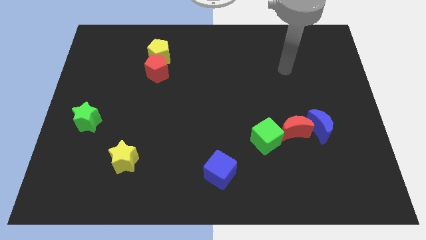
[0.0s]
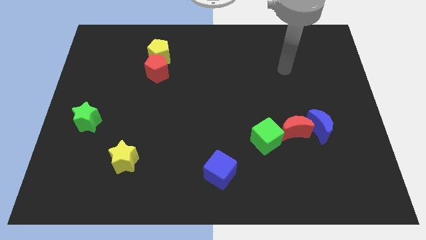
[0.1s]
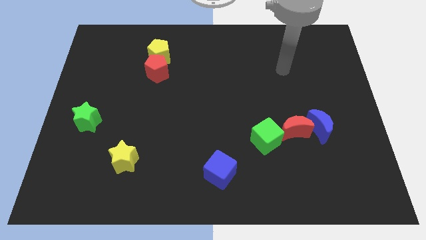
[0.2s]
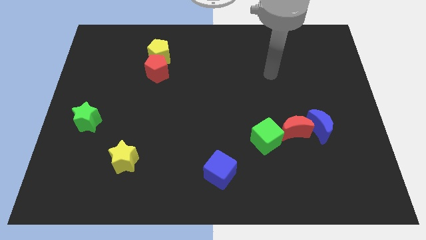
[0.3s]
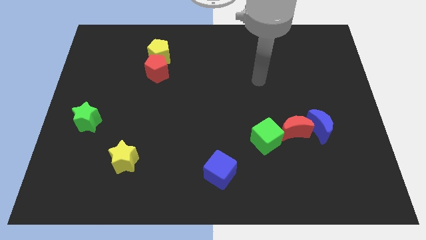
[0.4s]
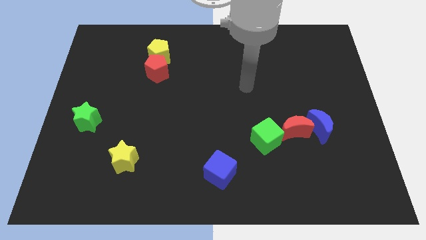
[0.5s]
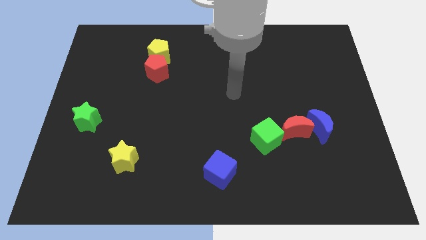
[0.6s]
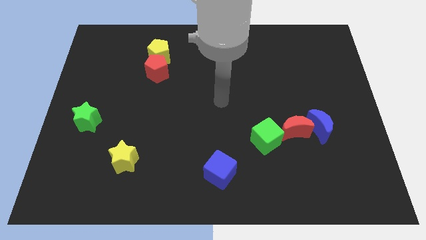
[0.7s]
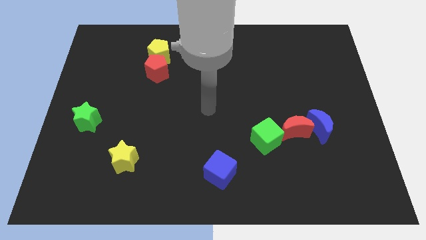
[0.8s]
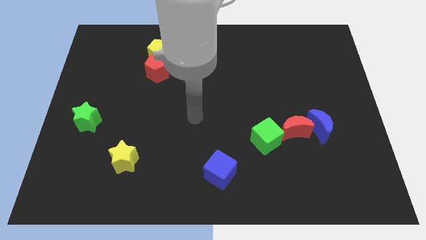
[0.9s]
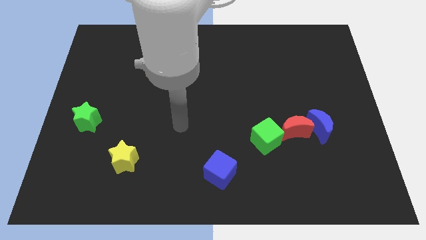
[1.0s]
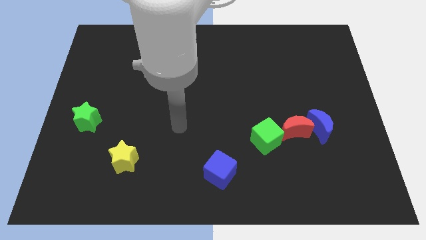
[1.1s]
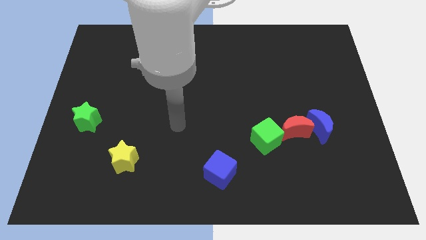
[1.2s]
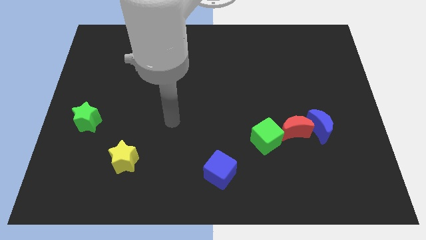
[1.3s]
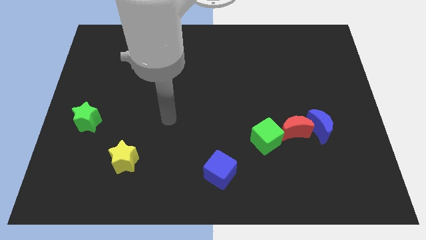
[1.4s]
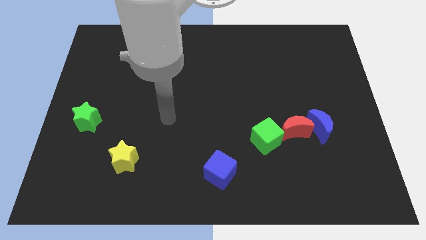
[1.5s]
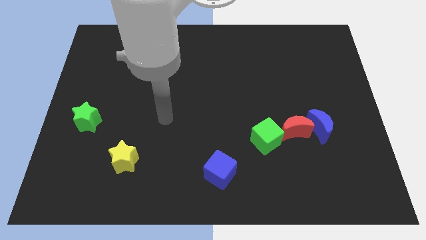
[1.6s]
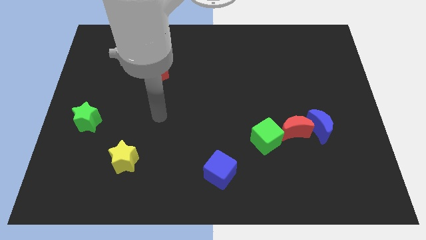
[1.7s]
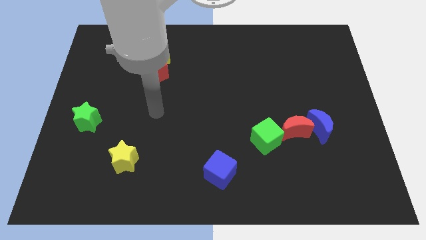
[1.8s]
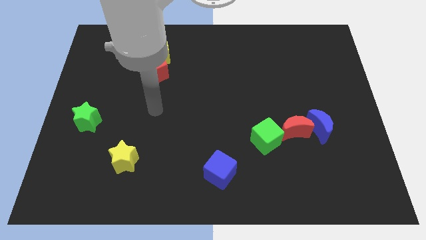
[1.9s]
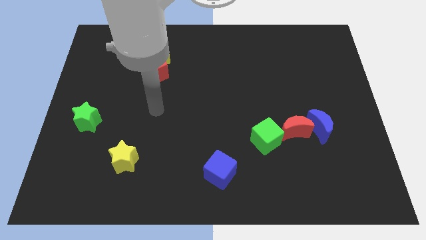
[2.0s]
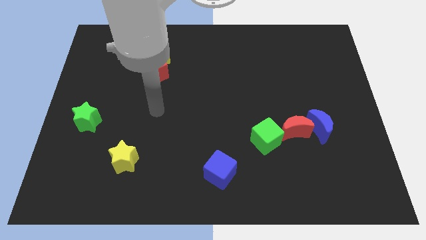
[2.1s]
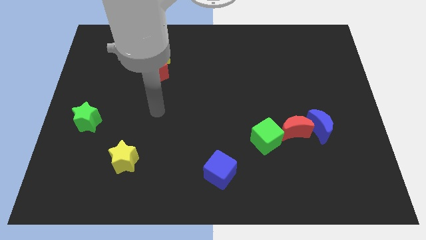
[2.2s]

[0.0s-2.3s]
move your arm below the red pentagon

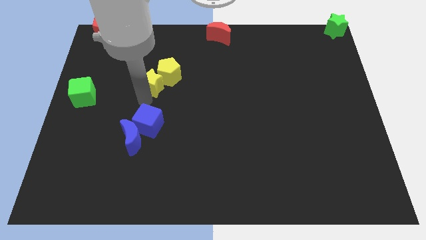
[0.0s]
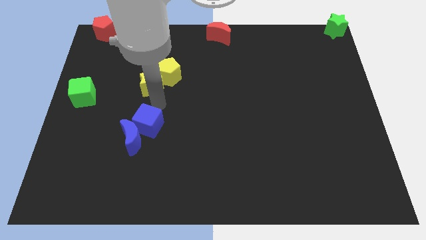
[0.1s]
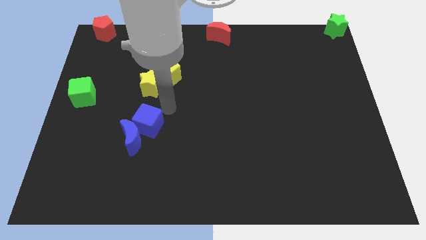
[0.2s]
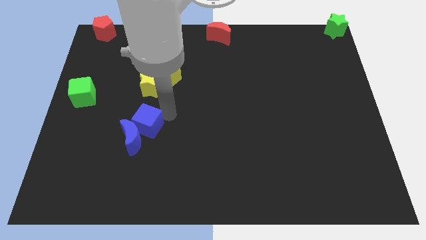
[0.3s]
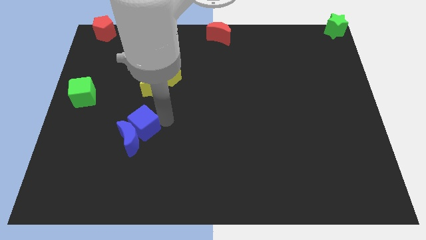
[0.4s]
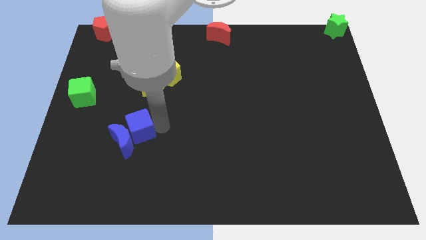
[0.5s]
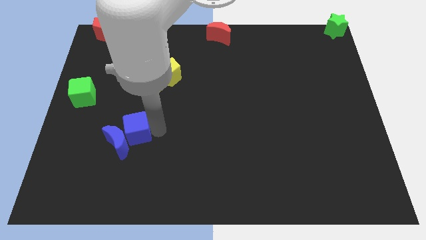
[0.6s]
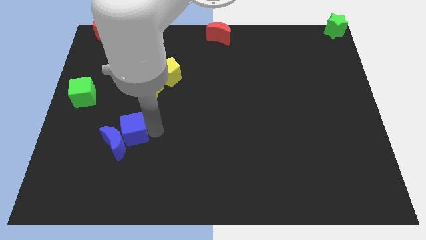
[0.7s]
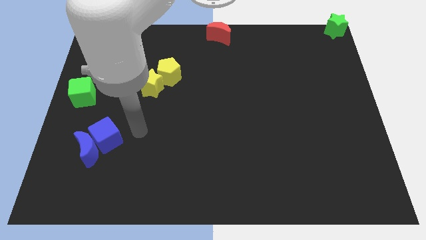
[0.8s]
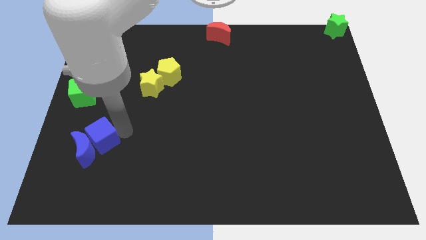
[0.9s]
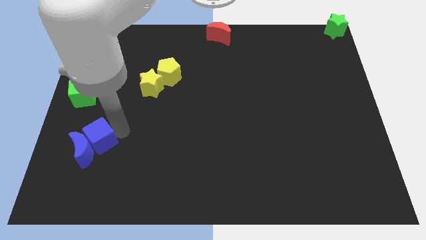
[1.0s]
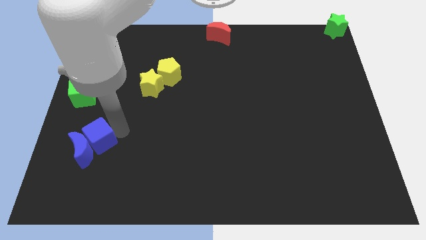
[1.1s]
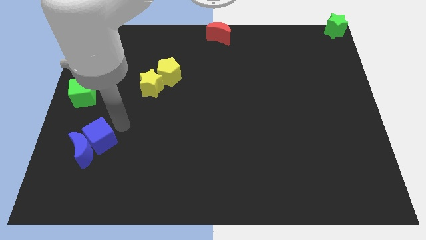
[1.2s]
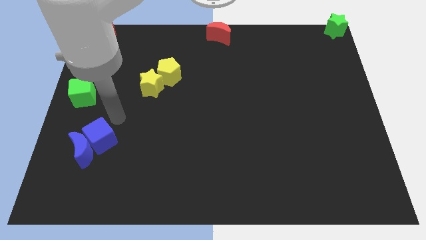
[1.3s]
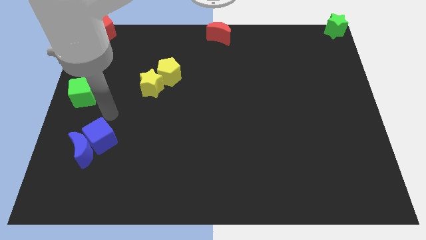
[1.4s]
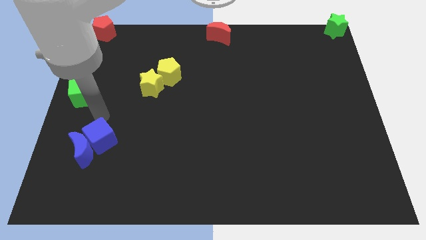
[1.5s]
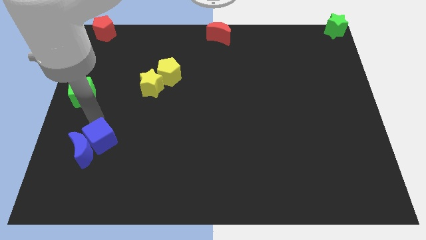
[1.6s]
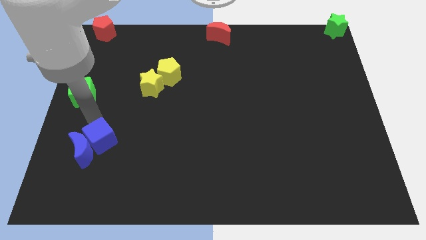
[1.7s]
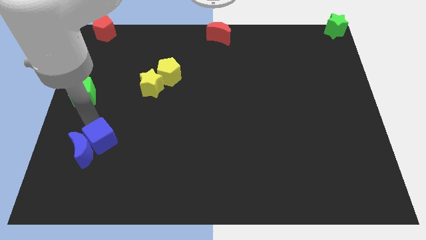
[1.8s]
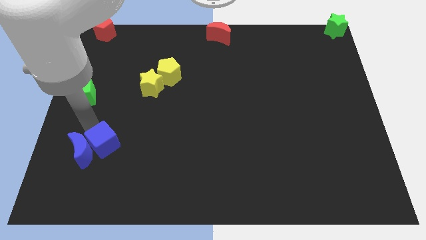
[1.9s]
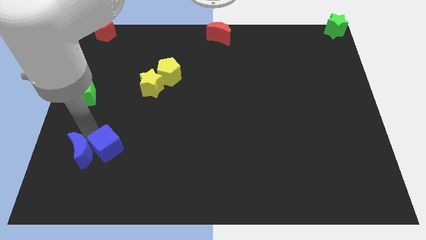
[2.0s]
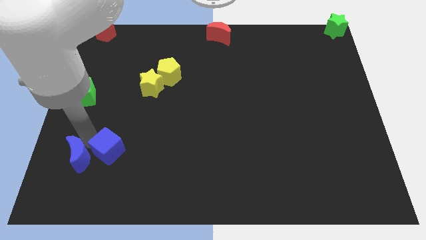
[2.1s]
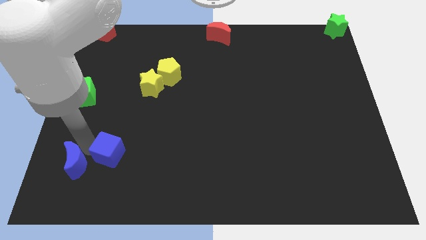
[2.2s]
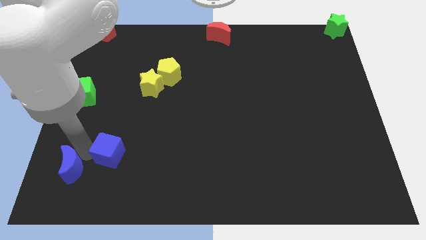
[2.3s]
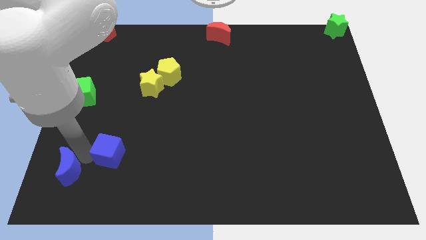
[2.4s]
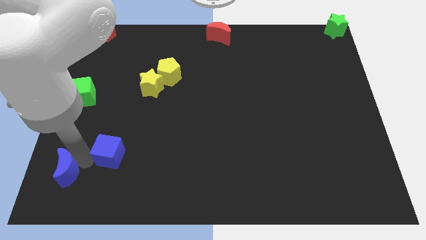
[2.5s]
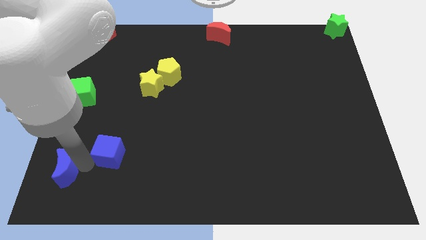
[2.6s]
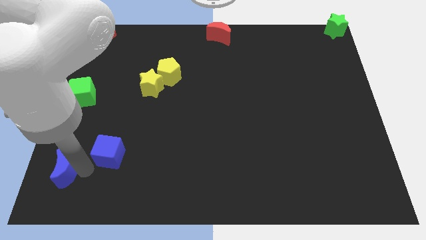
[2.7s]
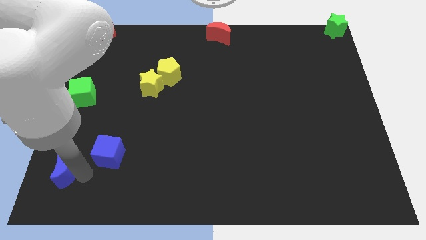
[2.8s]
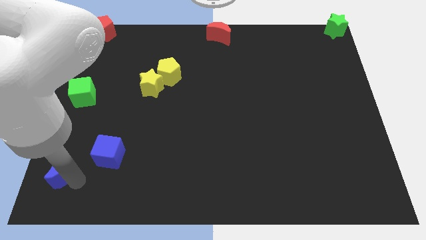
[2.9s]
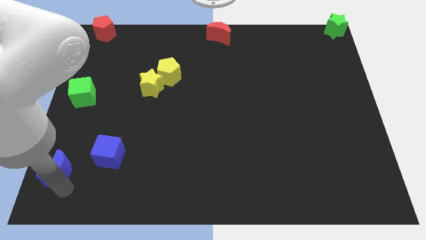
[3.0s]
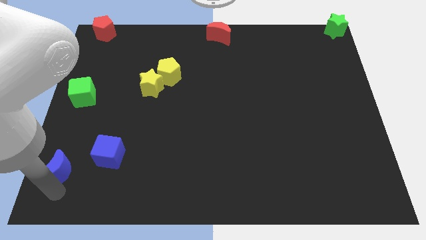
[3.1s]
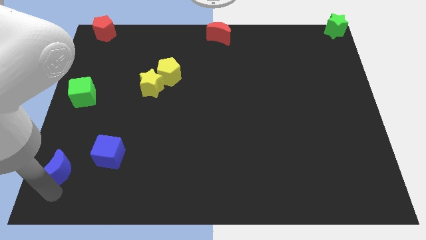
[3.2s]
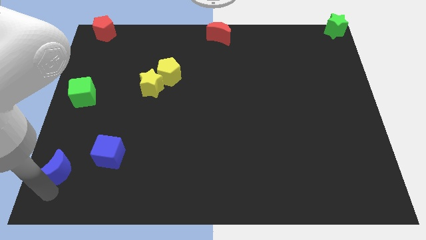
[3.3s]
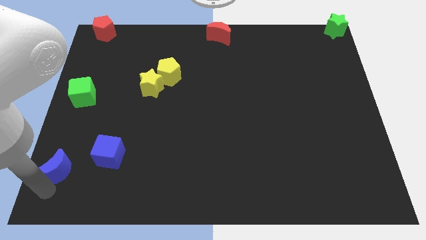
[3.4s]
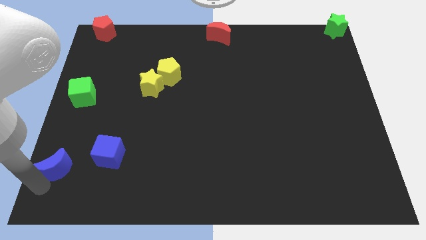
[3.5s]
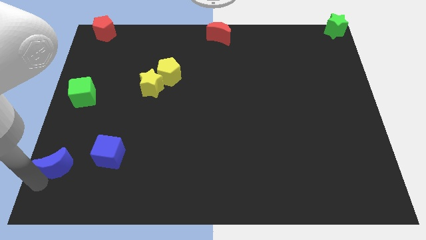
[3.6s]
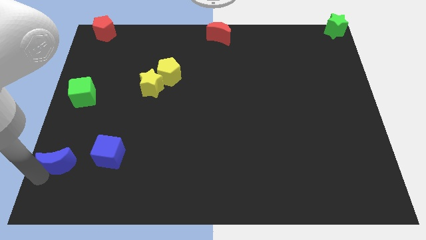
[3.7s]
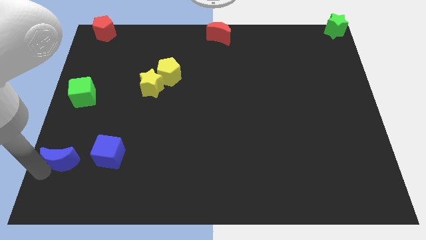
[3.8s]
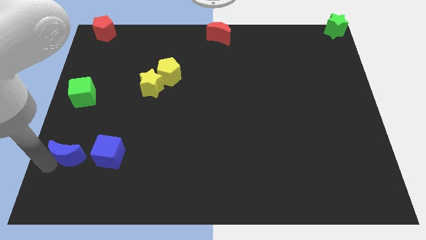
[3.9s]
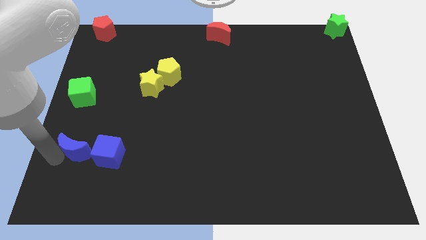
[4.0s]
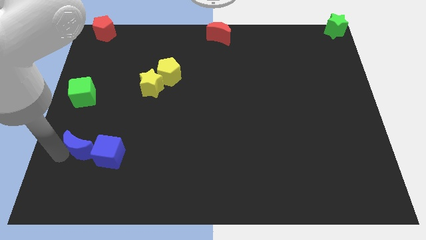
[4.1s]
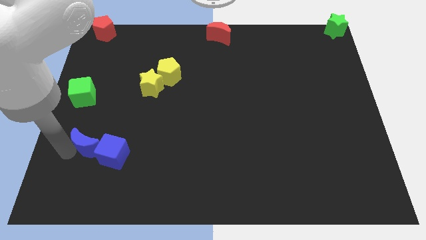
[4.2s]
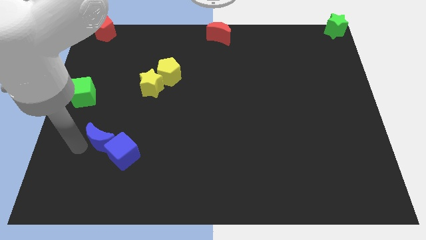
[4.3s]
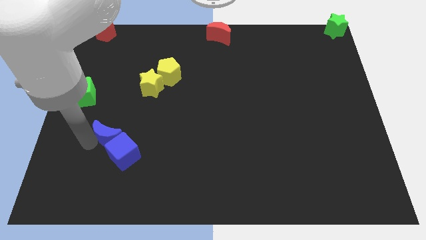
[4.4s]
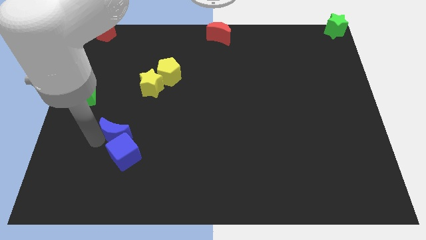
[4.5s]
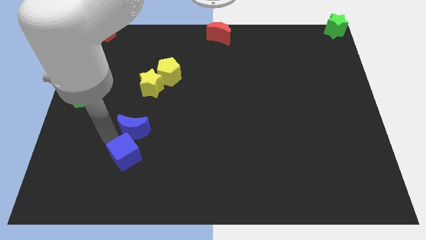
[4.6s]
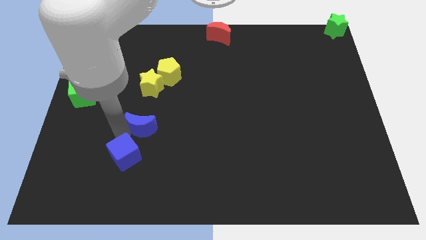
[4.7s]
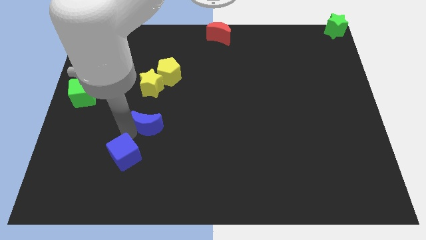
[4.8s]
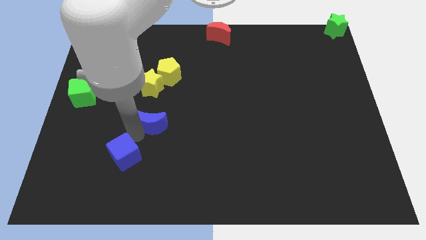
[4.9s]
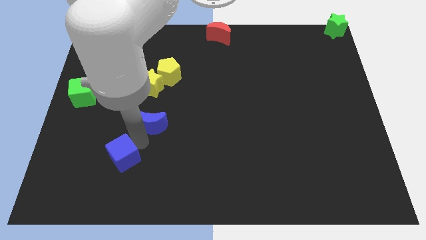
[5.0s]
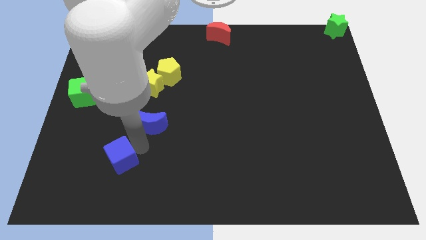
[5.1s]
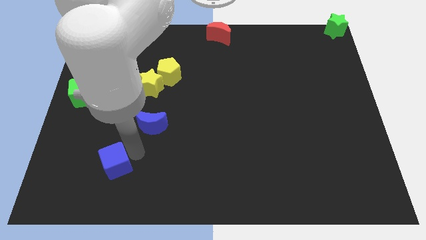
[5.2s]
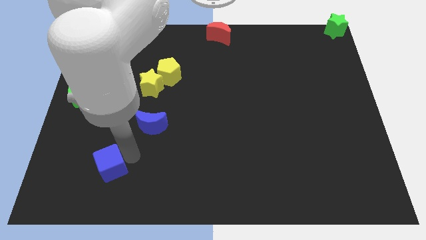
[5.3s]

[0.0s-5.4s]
separate blue cube and the blue moon

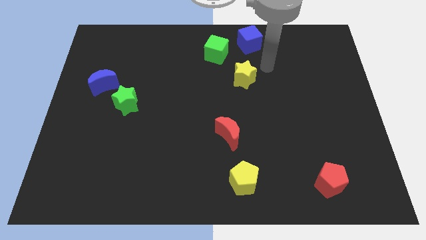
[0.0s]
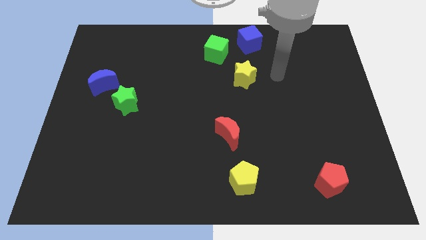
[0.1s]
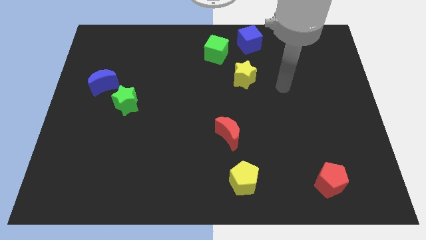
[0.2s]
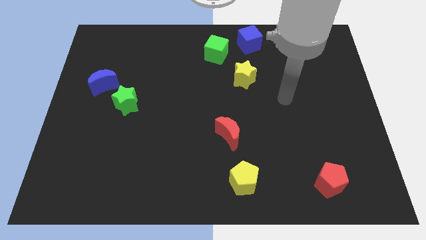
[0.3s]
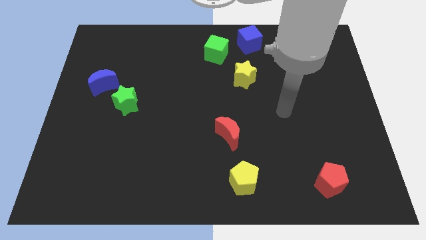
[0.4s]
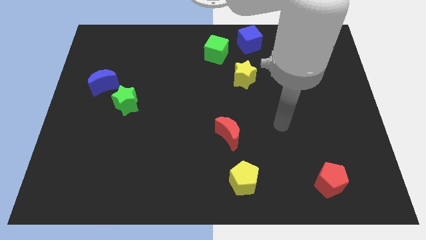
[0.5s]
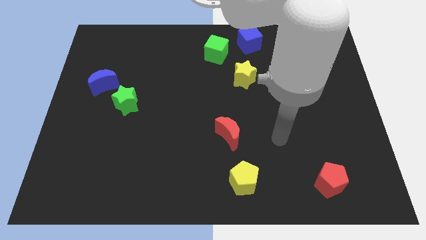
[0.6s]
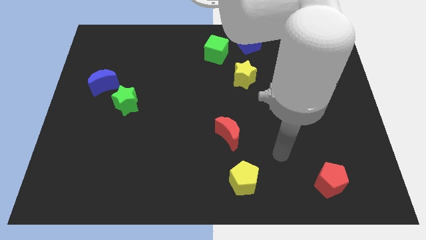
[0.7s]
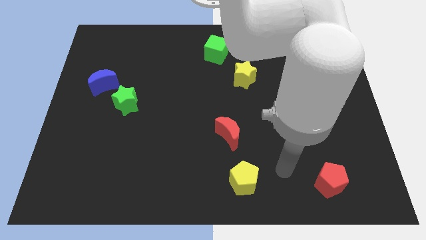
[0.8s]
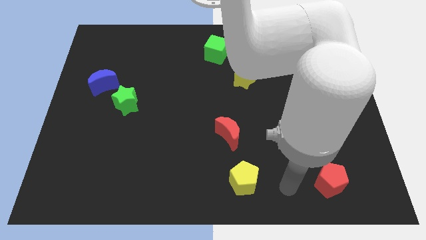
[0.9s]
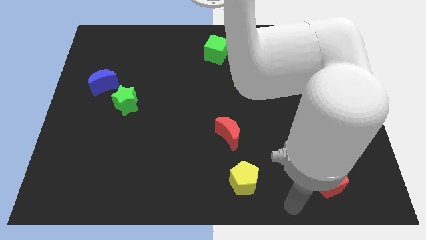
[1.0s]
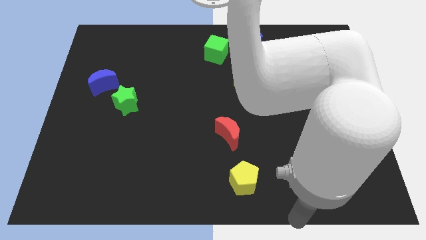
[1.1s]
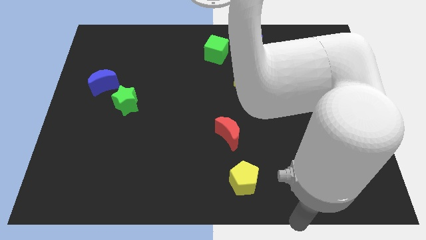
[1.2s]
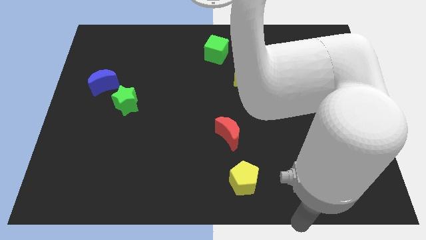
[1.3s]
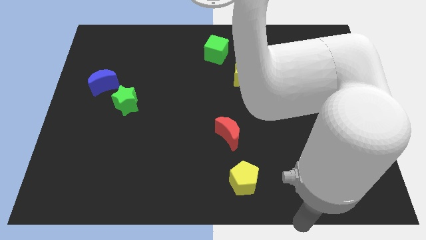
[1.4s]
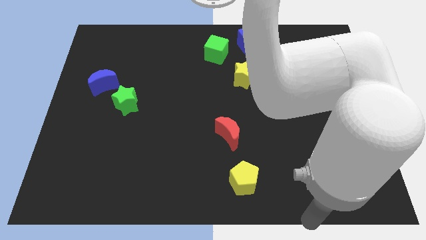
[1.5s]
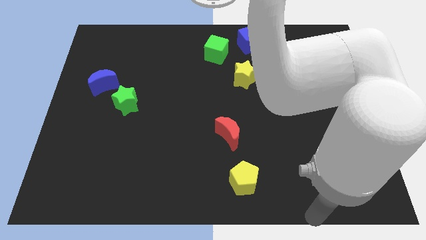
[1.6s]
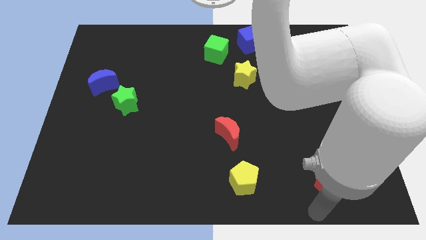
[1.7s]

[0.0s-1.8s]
move your arm away from the blue cube
